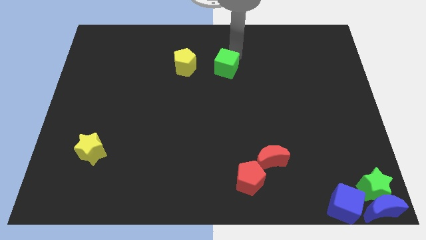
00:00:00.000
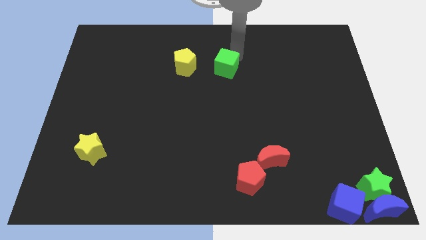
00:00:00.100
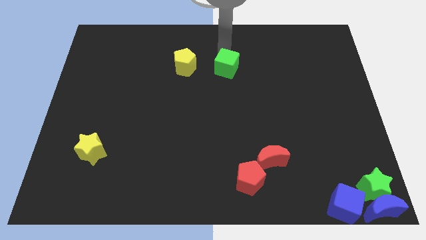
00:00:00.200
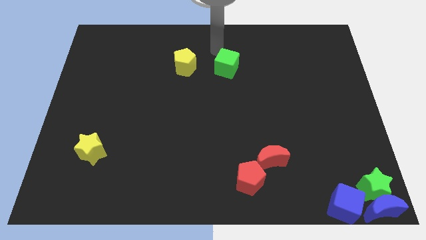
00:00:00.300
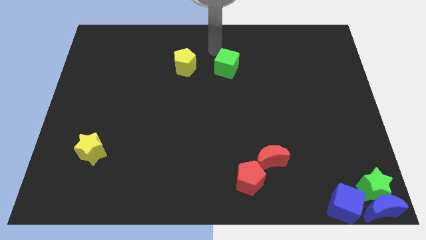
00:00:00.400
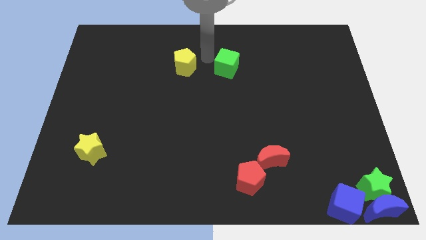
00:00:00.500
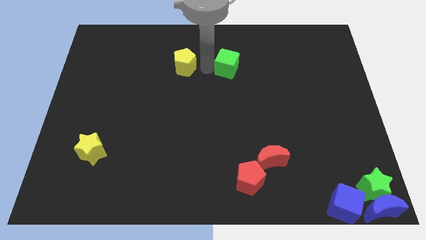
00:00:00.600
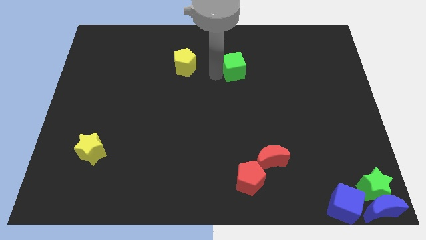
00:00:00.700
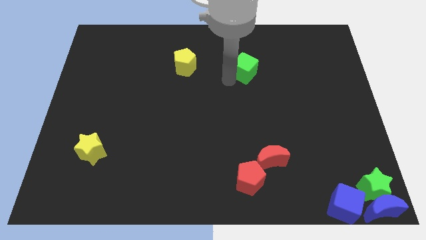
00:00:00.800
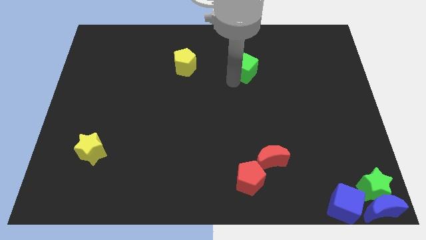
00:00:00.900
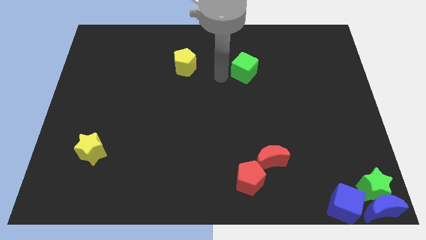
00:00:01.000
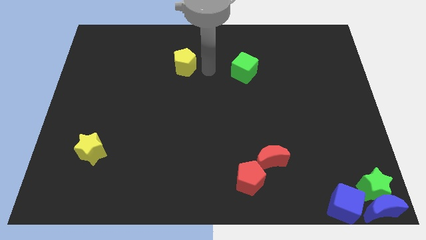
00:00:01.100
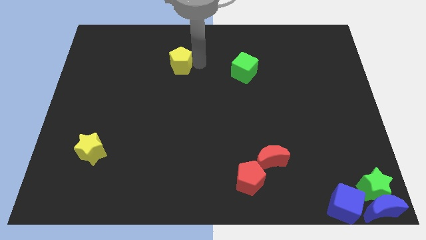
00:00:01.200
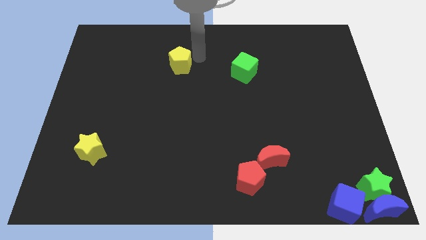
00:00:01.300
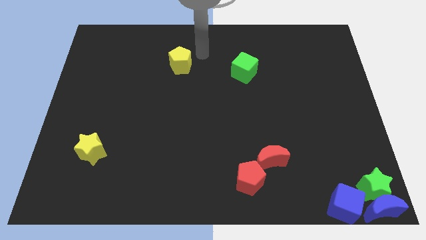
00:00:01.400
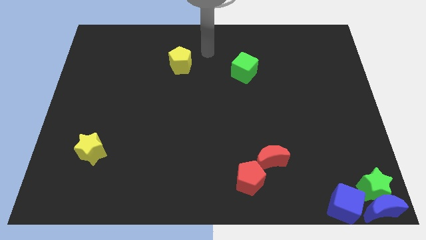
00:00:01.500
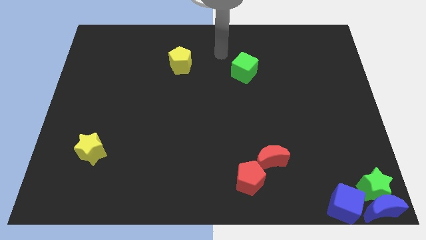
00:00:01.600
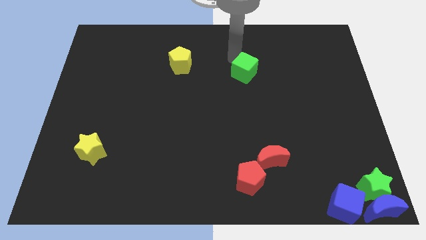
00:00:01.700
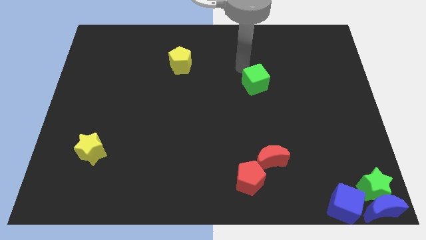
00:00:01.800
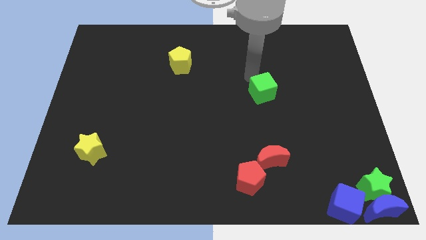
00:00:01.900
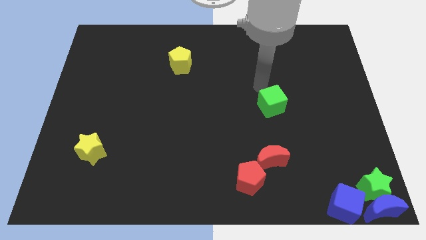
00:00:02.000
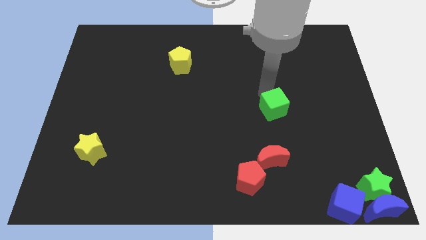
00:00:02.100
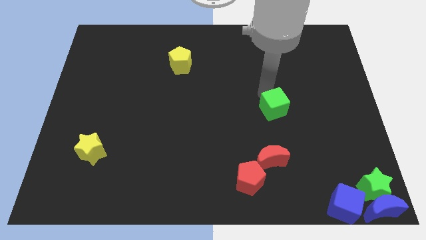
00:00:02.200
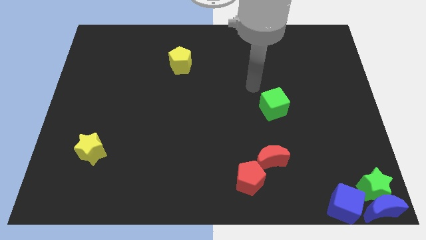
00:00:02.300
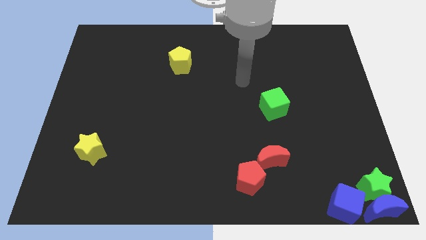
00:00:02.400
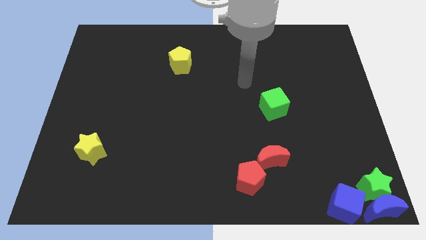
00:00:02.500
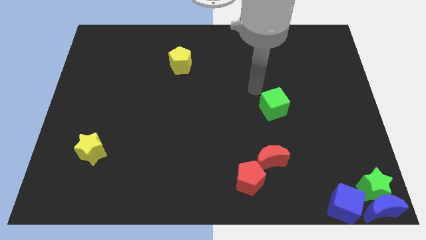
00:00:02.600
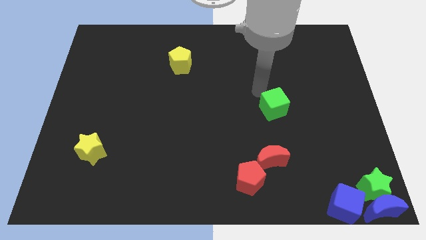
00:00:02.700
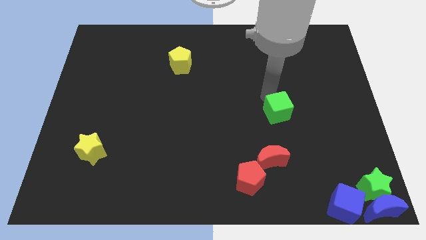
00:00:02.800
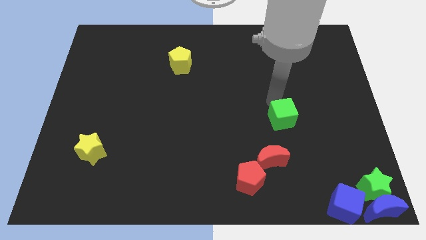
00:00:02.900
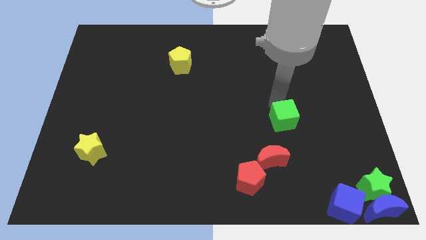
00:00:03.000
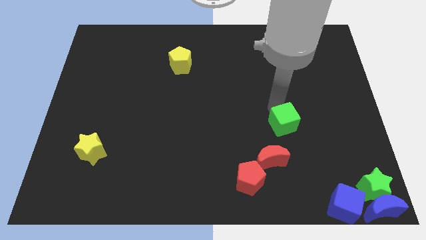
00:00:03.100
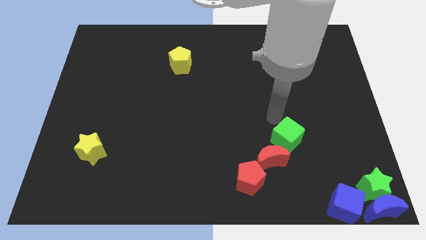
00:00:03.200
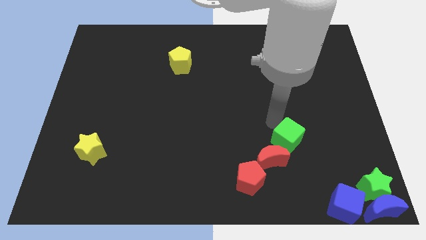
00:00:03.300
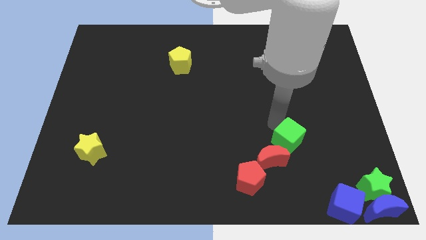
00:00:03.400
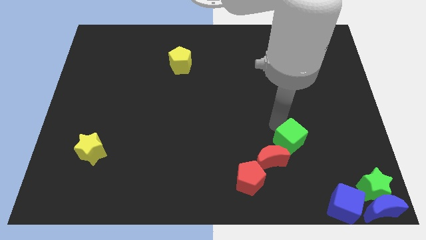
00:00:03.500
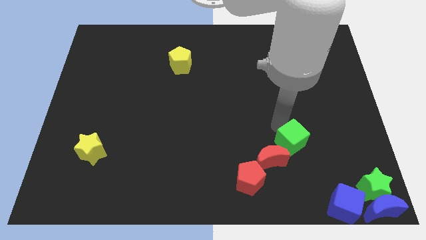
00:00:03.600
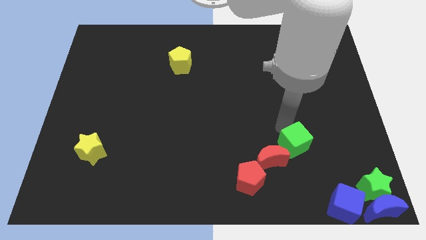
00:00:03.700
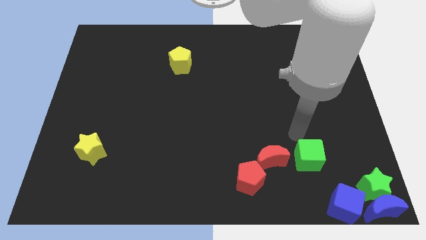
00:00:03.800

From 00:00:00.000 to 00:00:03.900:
move the green cube to touch the top right side of the red moon

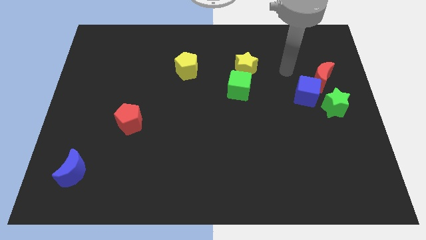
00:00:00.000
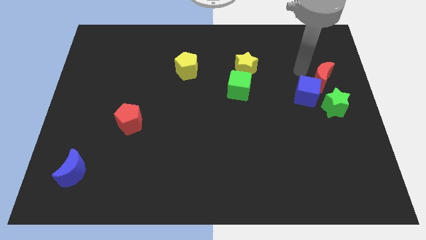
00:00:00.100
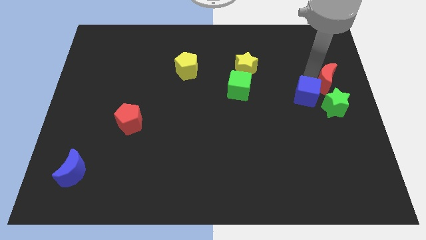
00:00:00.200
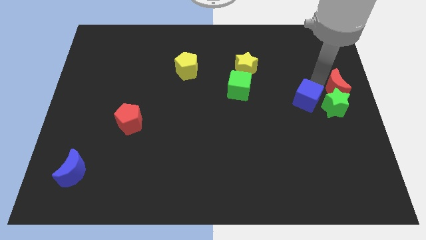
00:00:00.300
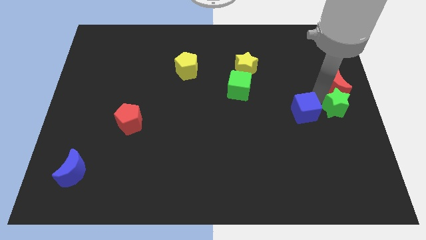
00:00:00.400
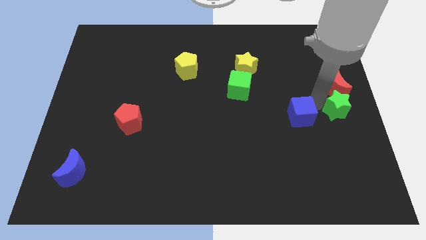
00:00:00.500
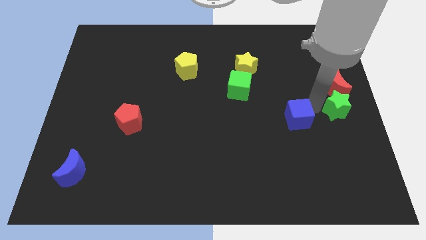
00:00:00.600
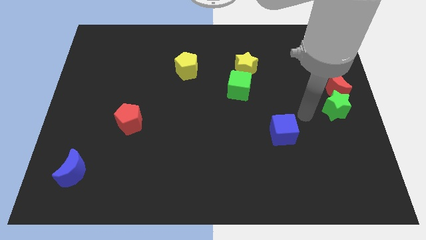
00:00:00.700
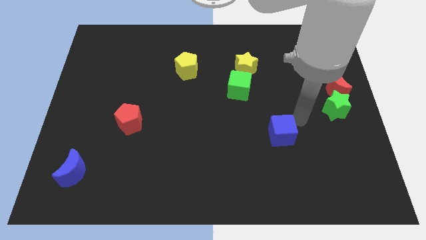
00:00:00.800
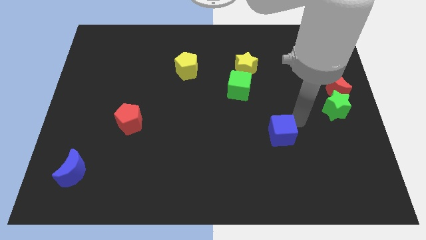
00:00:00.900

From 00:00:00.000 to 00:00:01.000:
separate the blue cube and the red crescent

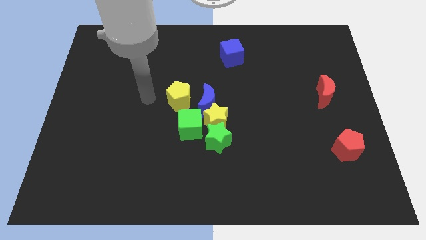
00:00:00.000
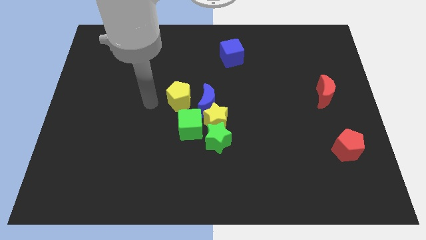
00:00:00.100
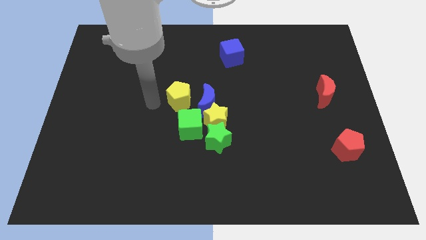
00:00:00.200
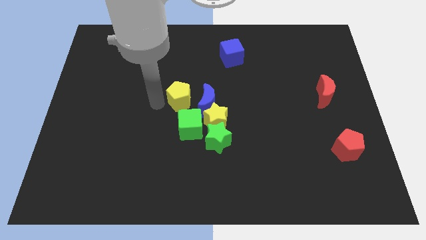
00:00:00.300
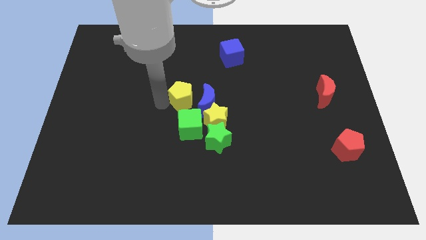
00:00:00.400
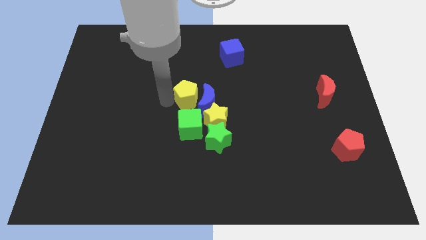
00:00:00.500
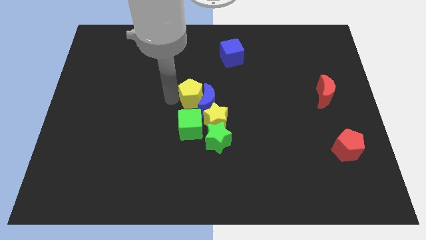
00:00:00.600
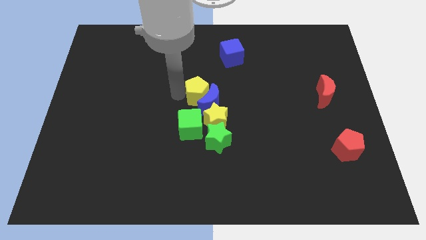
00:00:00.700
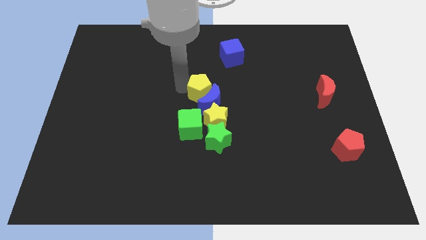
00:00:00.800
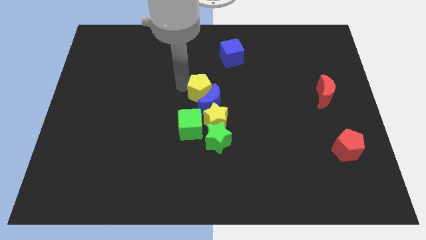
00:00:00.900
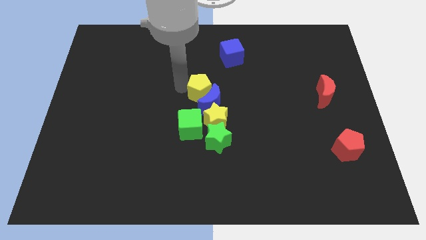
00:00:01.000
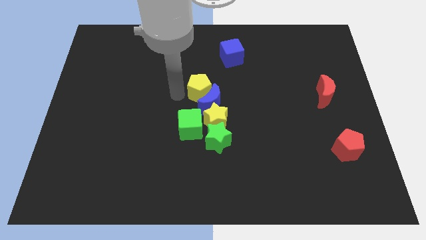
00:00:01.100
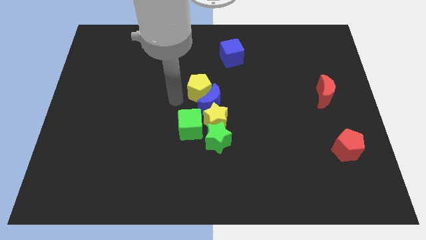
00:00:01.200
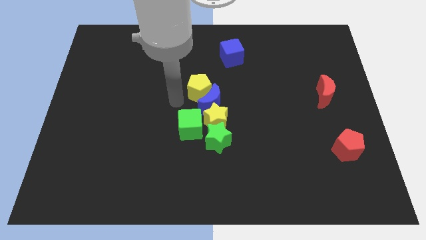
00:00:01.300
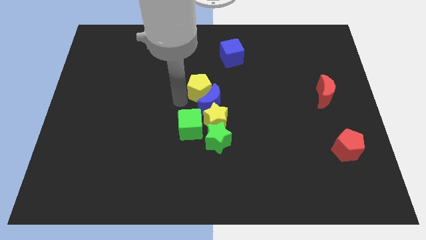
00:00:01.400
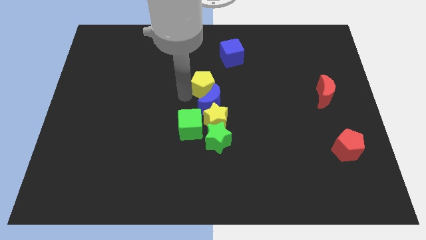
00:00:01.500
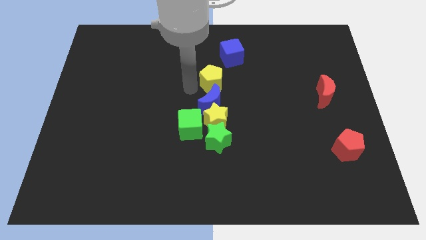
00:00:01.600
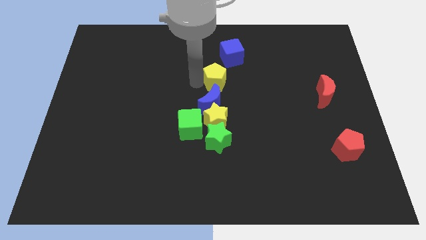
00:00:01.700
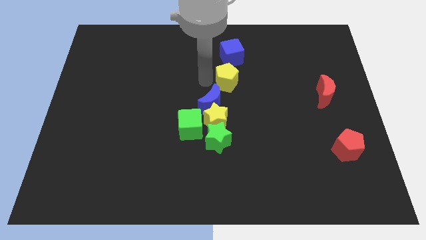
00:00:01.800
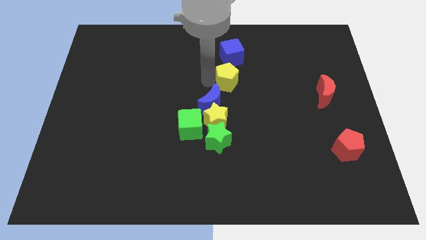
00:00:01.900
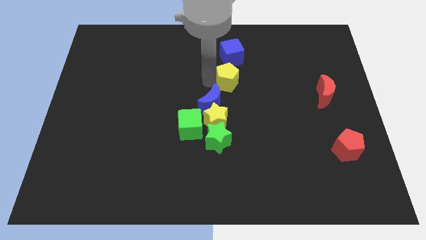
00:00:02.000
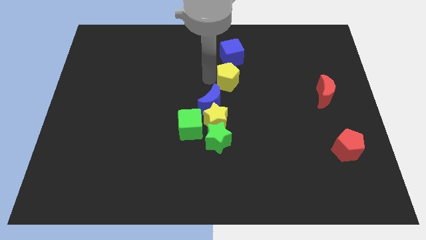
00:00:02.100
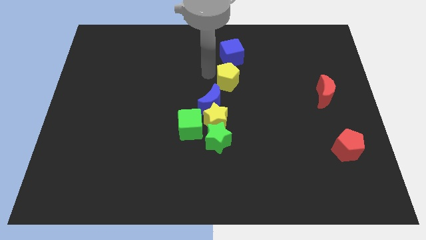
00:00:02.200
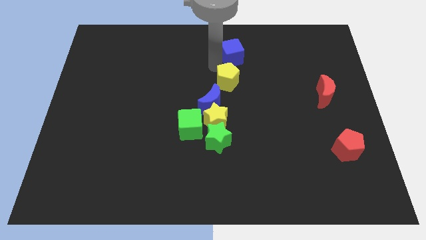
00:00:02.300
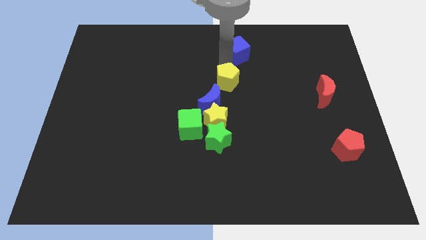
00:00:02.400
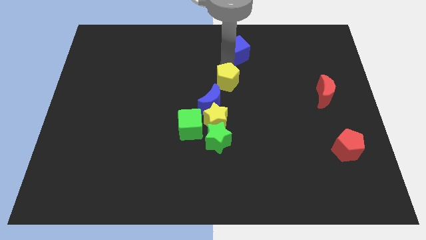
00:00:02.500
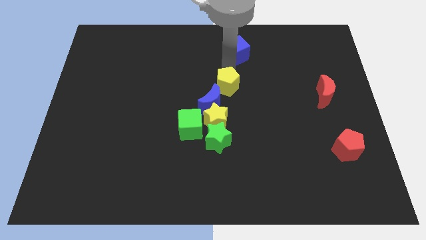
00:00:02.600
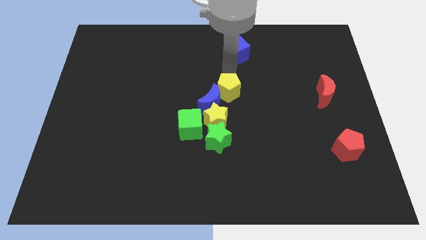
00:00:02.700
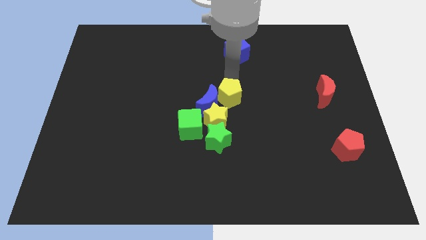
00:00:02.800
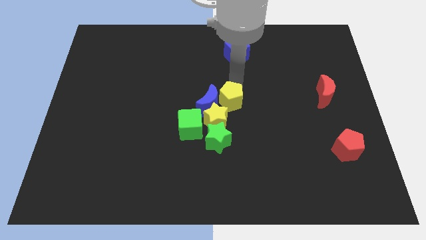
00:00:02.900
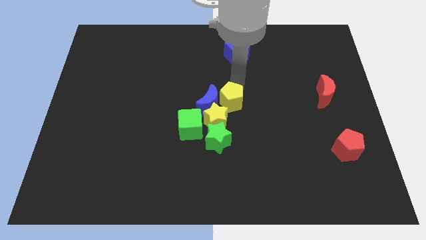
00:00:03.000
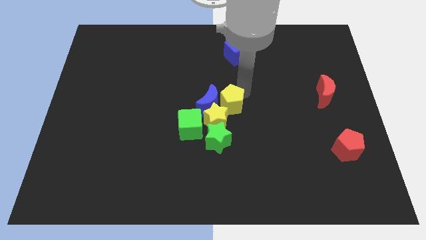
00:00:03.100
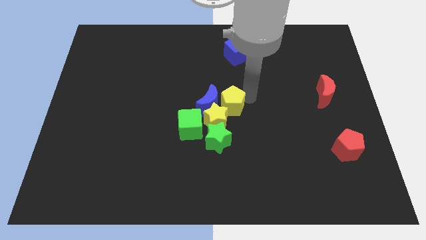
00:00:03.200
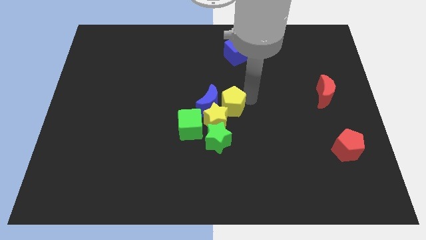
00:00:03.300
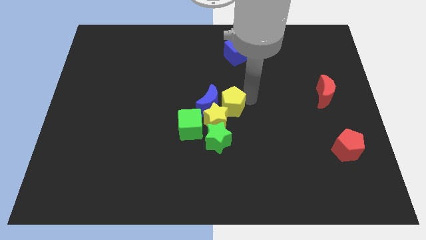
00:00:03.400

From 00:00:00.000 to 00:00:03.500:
move the yellow pentagon to the right of the blue crescent

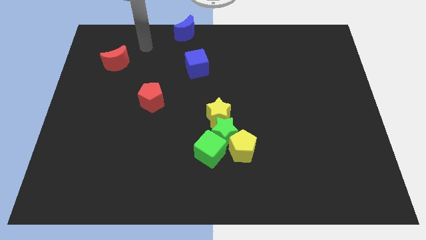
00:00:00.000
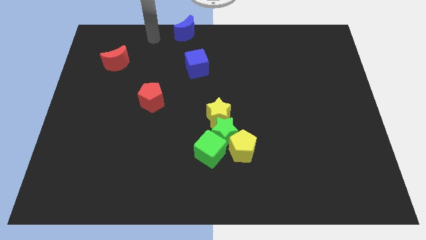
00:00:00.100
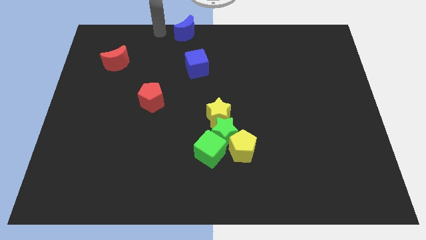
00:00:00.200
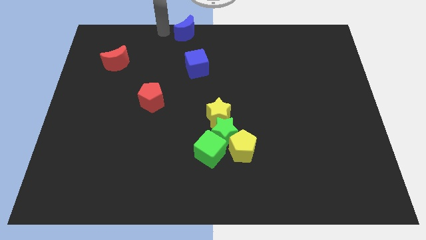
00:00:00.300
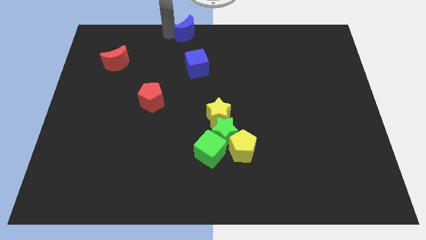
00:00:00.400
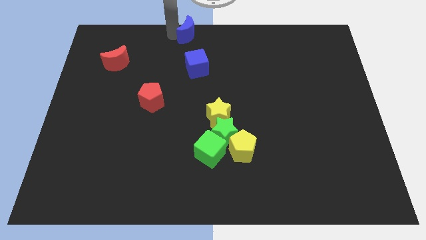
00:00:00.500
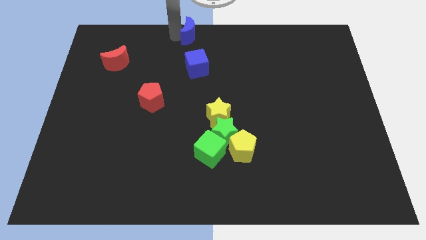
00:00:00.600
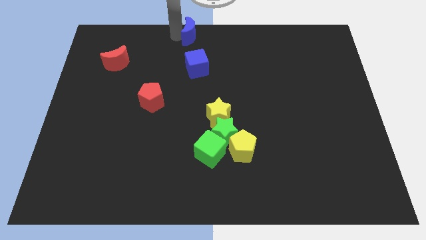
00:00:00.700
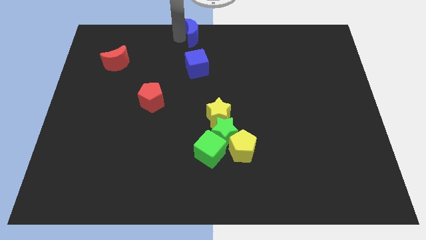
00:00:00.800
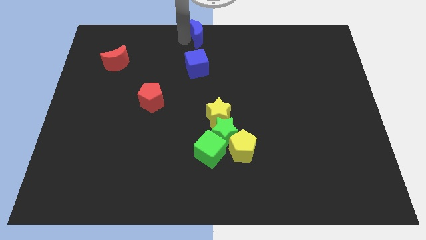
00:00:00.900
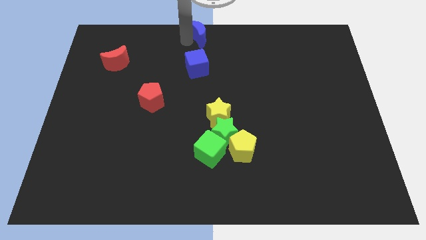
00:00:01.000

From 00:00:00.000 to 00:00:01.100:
put the blue moon above the blue cube
